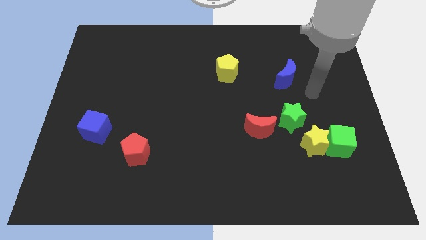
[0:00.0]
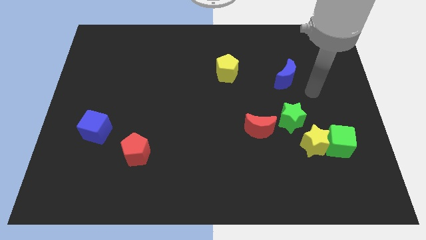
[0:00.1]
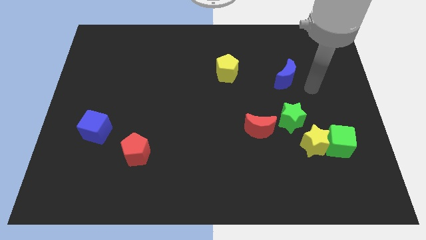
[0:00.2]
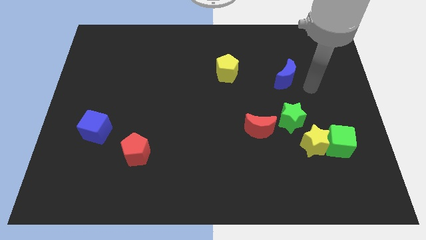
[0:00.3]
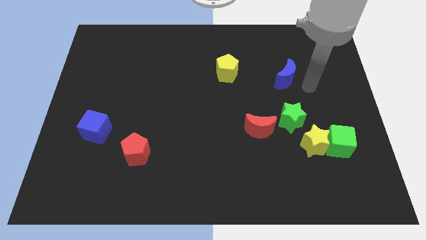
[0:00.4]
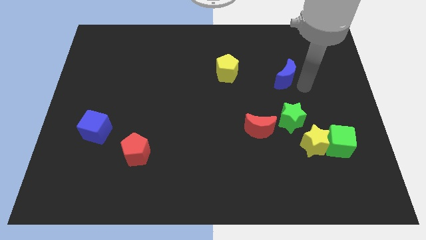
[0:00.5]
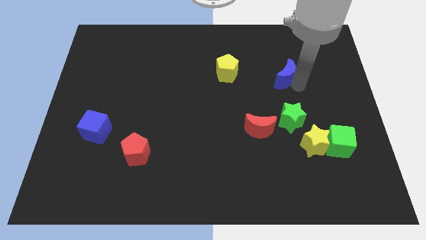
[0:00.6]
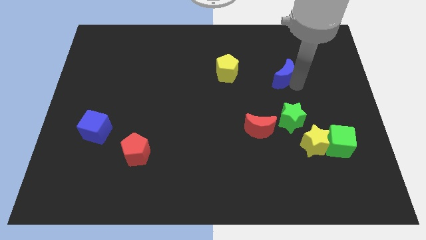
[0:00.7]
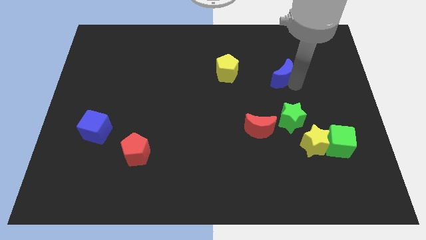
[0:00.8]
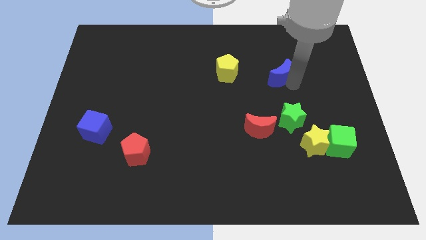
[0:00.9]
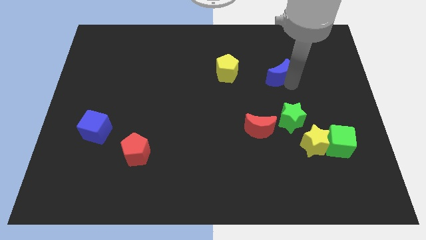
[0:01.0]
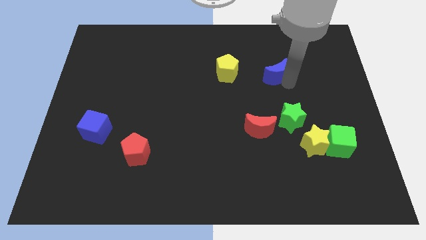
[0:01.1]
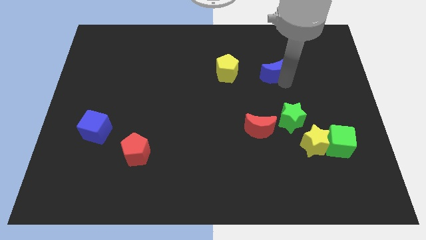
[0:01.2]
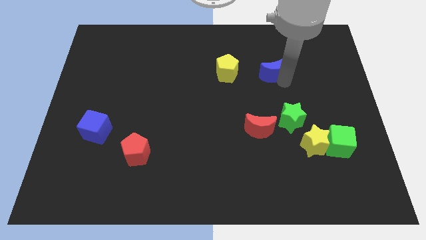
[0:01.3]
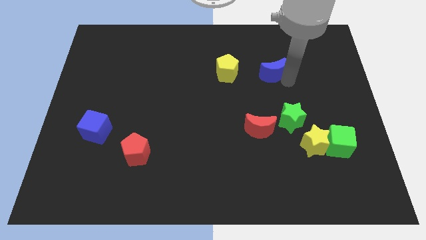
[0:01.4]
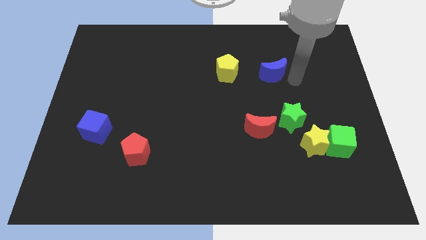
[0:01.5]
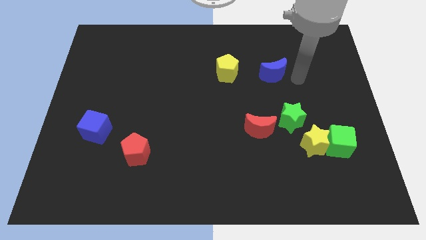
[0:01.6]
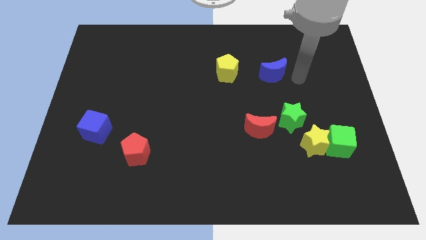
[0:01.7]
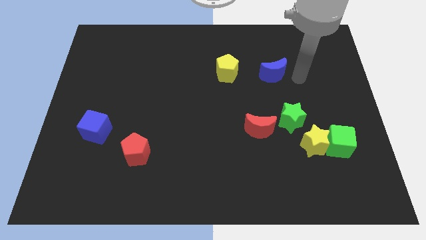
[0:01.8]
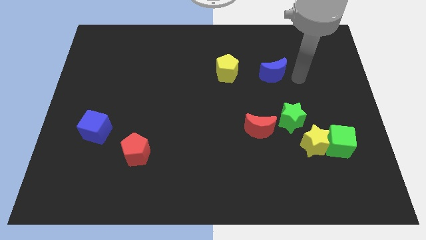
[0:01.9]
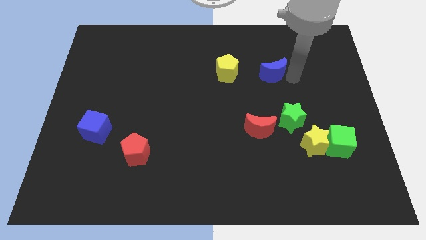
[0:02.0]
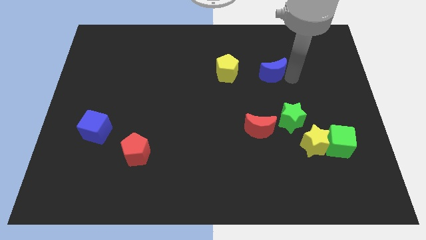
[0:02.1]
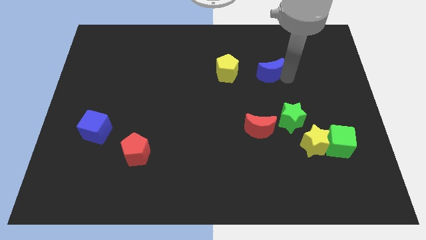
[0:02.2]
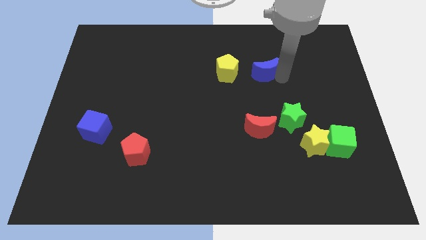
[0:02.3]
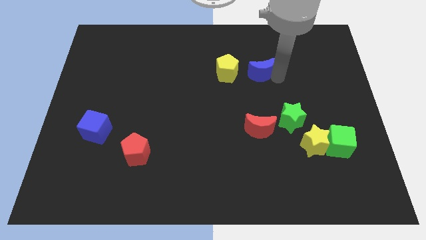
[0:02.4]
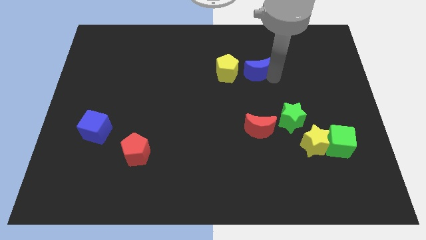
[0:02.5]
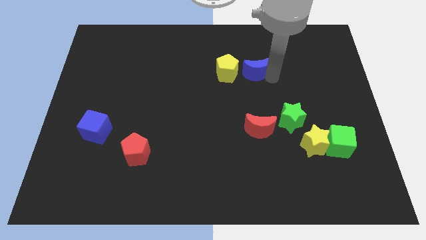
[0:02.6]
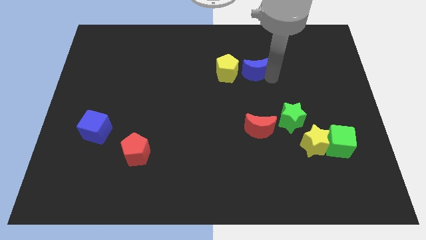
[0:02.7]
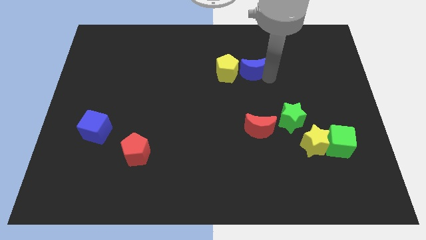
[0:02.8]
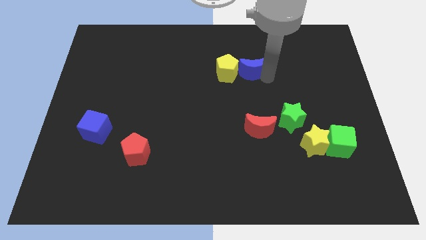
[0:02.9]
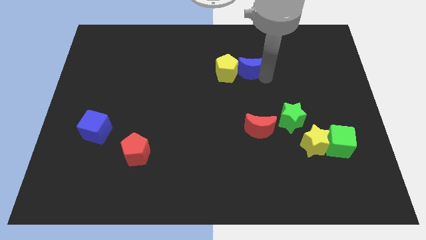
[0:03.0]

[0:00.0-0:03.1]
place the blue moon to the right of the yellow pentagon

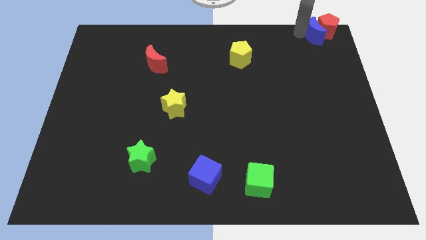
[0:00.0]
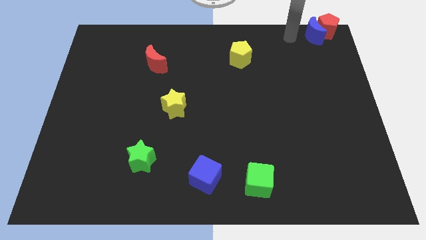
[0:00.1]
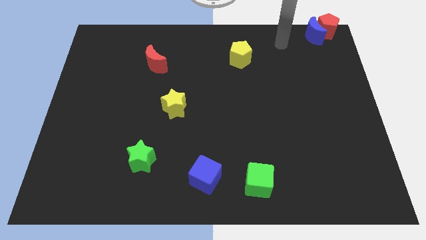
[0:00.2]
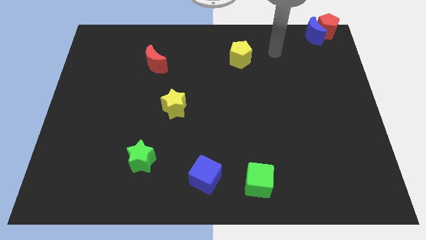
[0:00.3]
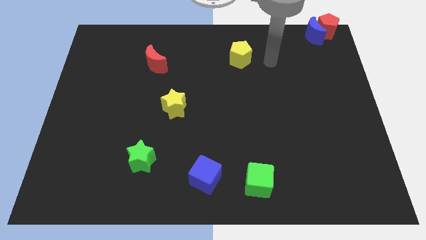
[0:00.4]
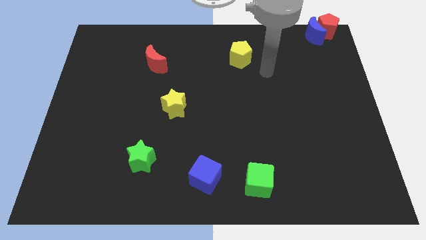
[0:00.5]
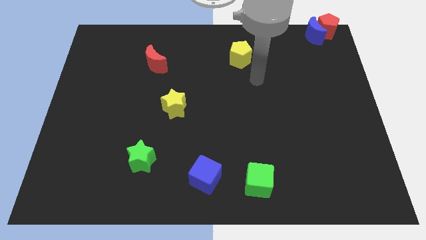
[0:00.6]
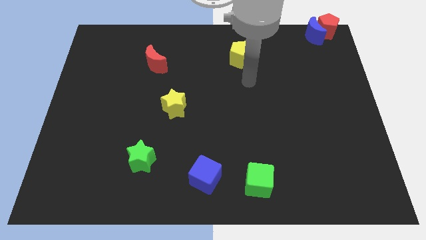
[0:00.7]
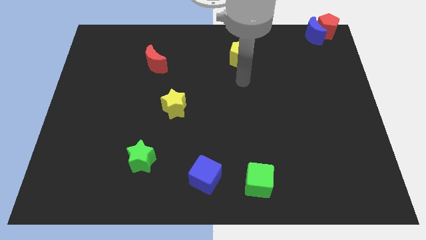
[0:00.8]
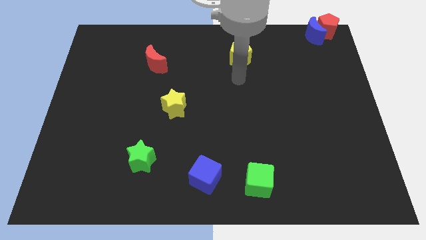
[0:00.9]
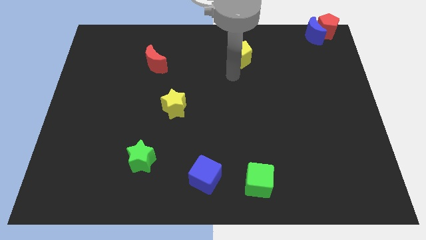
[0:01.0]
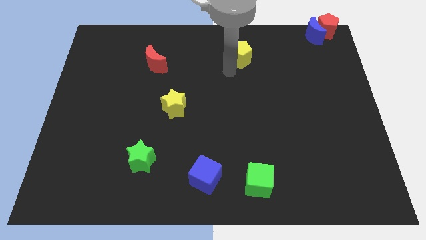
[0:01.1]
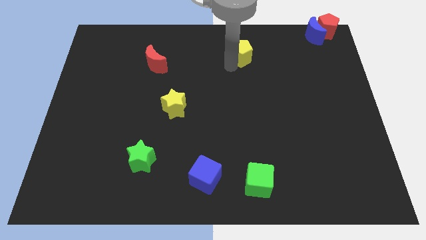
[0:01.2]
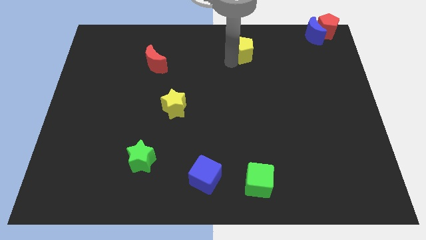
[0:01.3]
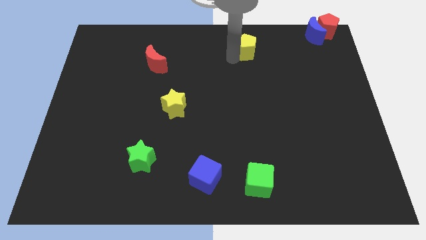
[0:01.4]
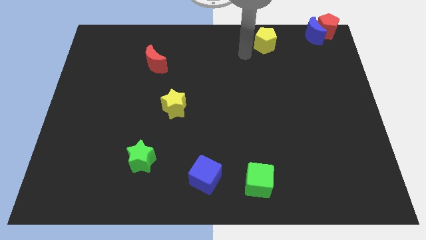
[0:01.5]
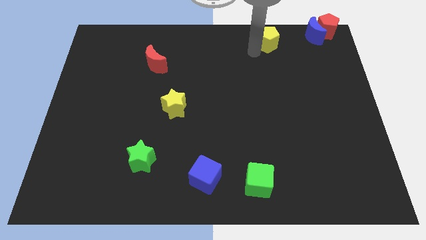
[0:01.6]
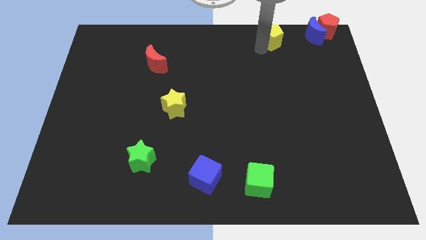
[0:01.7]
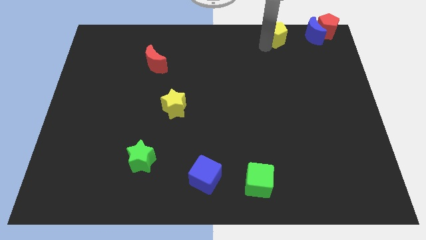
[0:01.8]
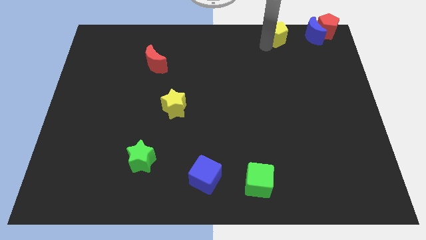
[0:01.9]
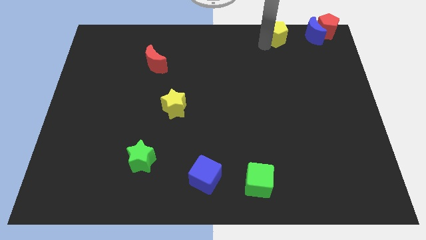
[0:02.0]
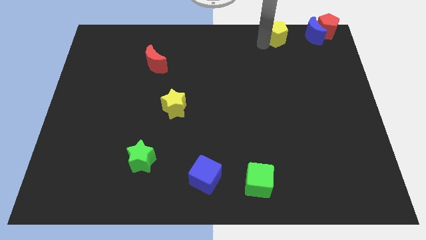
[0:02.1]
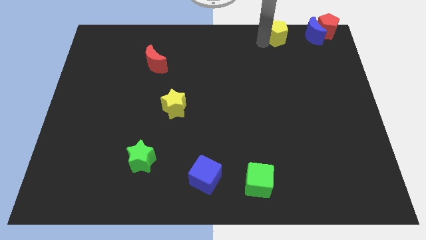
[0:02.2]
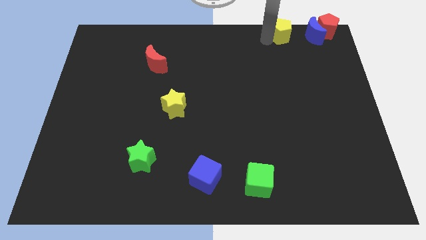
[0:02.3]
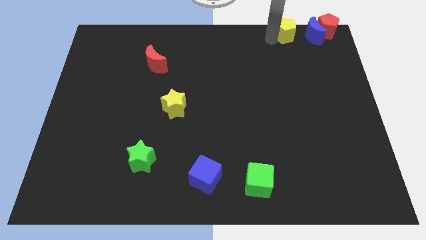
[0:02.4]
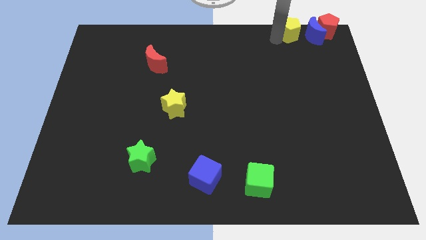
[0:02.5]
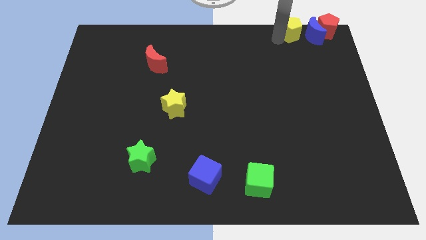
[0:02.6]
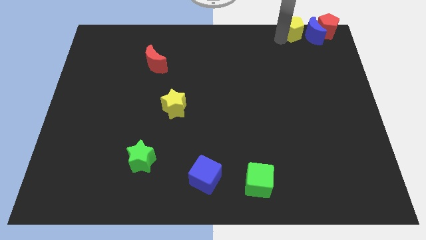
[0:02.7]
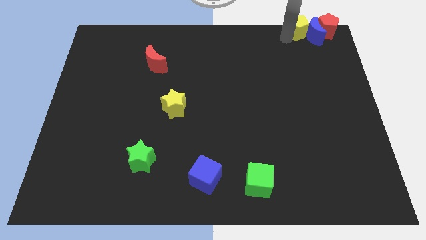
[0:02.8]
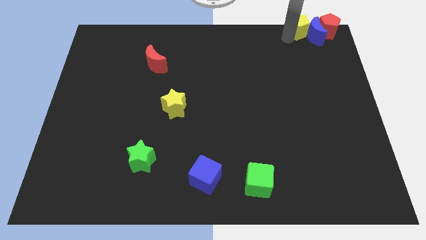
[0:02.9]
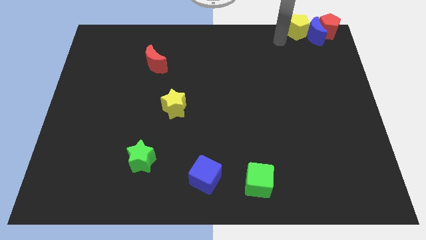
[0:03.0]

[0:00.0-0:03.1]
add yellow pentagon to the left of blue moon

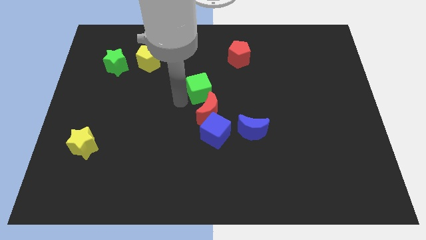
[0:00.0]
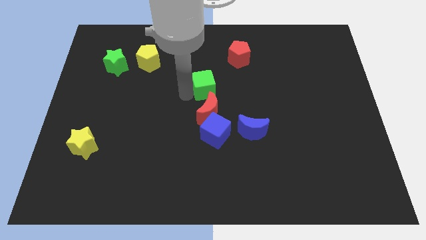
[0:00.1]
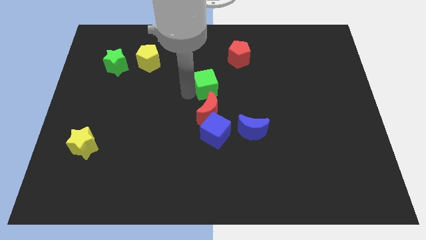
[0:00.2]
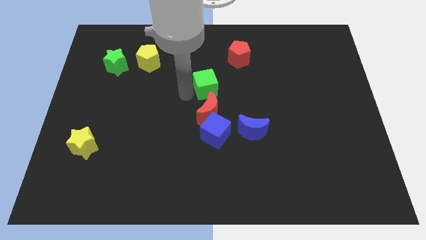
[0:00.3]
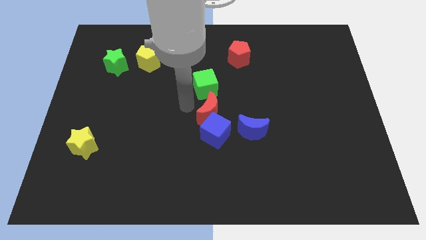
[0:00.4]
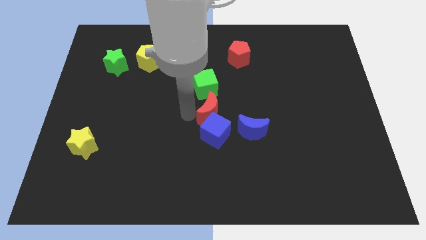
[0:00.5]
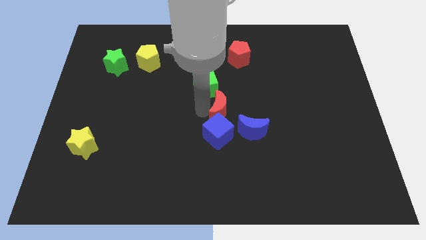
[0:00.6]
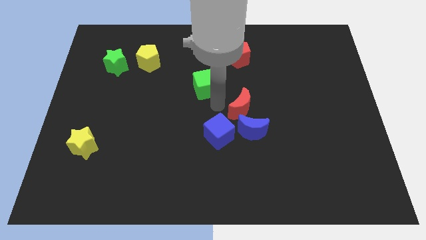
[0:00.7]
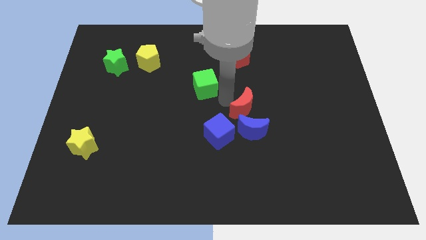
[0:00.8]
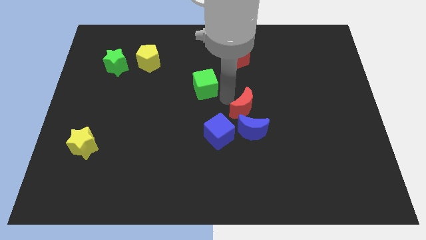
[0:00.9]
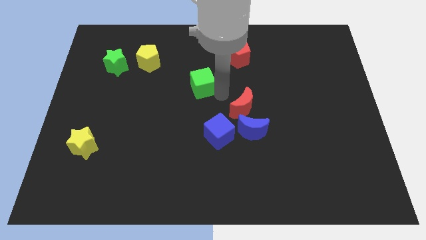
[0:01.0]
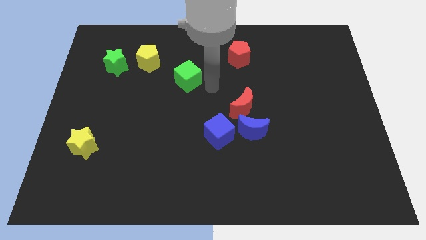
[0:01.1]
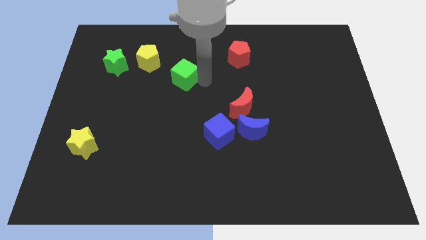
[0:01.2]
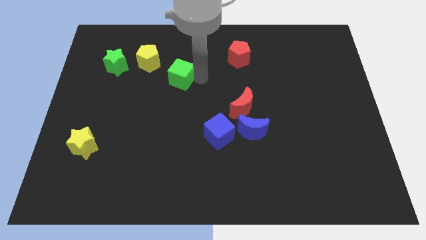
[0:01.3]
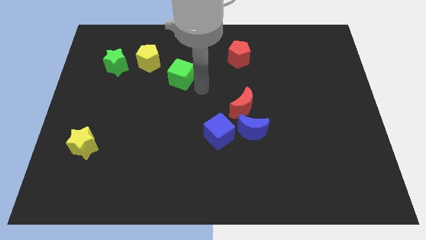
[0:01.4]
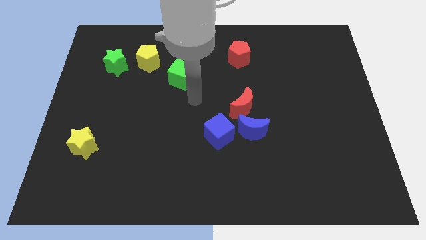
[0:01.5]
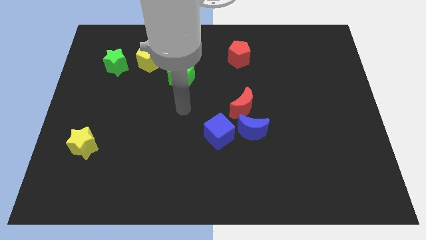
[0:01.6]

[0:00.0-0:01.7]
separate the red moon from the green cube

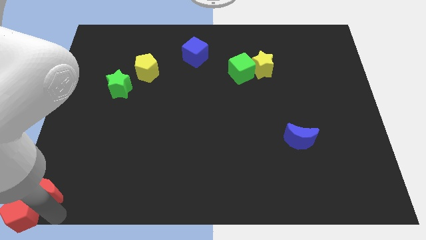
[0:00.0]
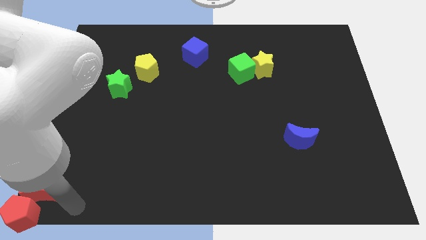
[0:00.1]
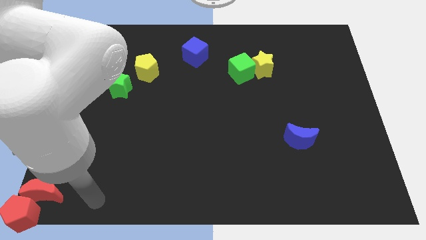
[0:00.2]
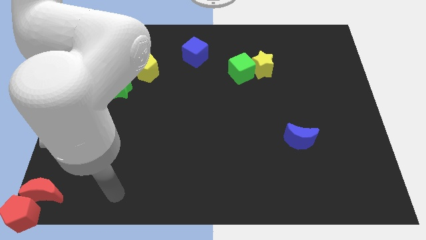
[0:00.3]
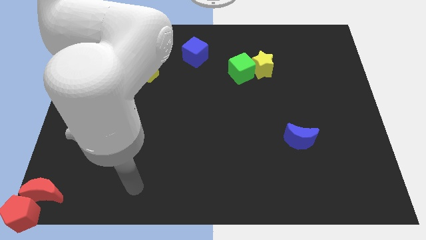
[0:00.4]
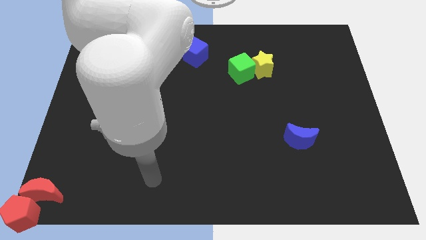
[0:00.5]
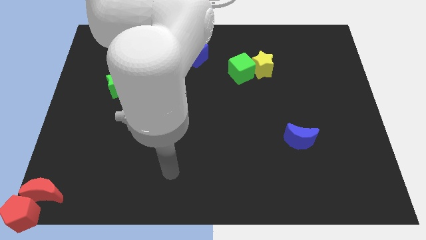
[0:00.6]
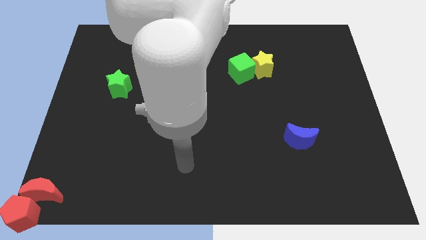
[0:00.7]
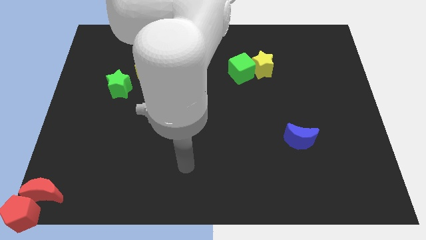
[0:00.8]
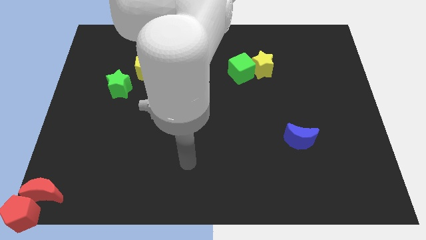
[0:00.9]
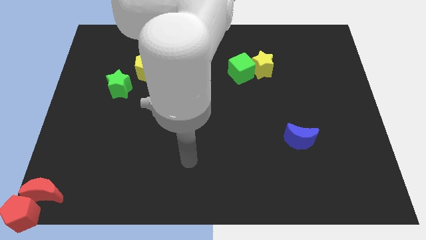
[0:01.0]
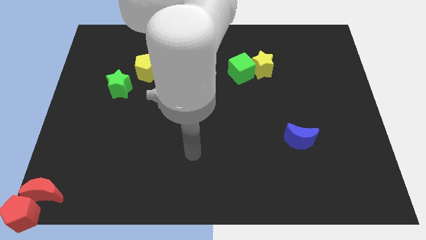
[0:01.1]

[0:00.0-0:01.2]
move your arm away from the red blocks

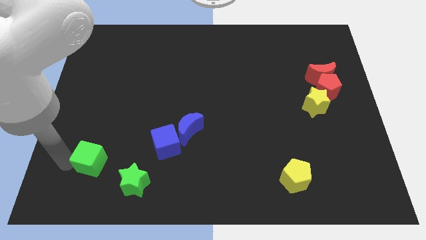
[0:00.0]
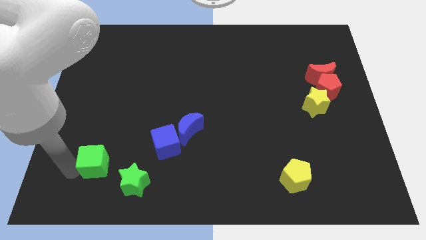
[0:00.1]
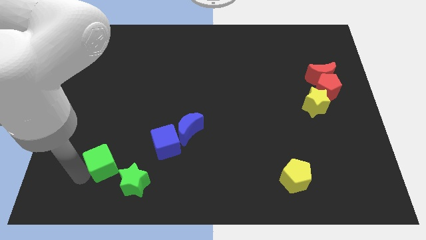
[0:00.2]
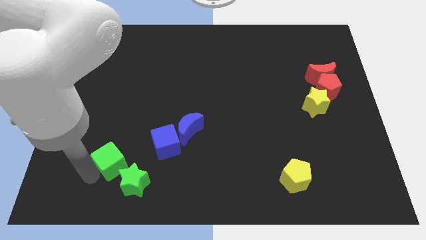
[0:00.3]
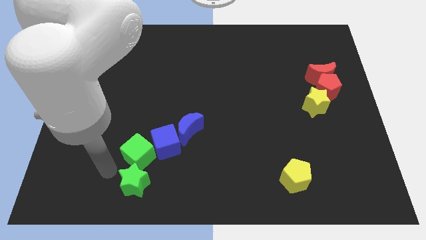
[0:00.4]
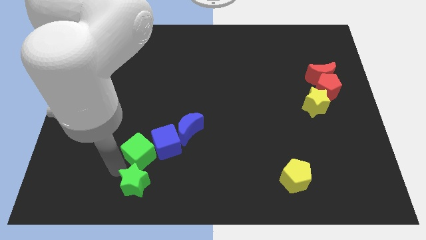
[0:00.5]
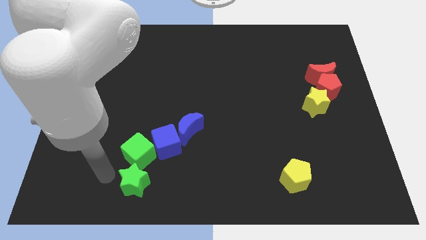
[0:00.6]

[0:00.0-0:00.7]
place the green cube below the blue cube
